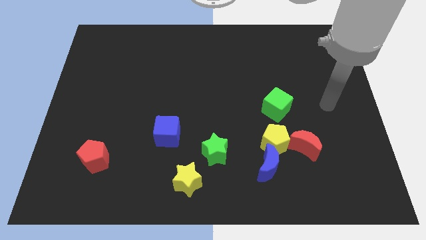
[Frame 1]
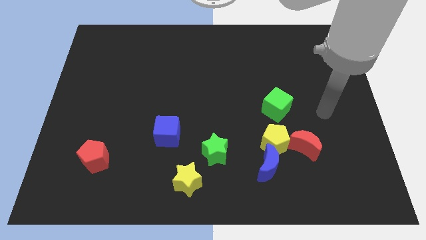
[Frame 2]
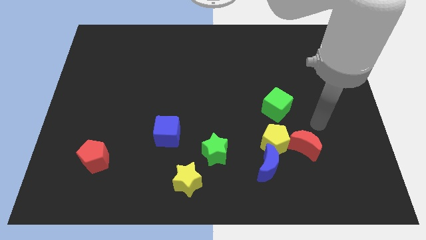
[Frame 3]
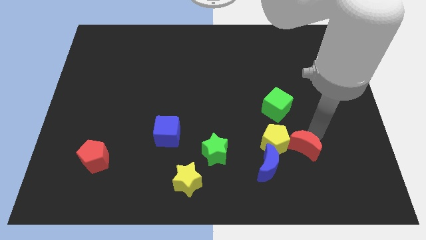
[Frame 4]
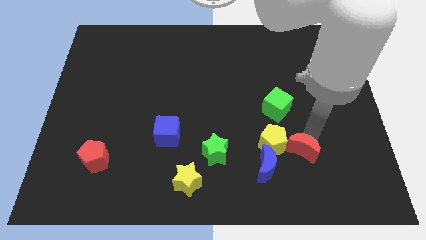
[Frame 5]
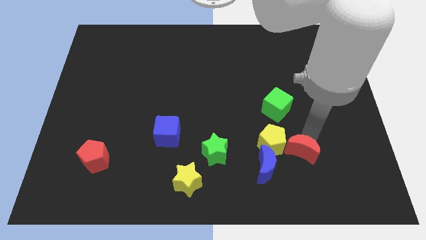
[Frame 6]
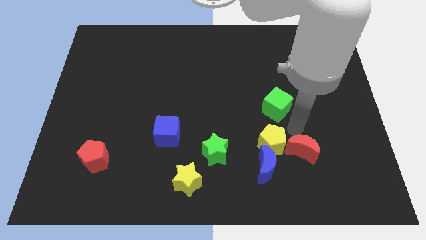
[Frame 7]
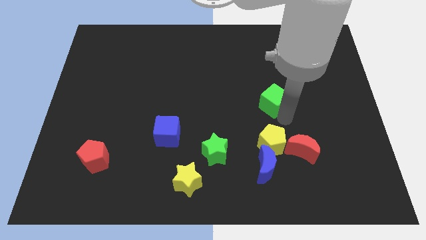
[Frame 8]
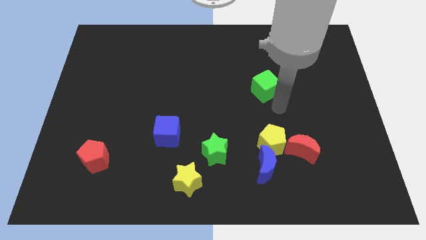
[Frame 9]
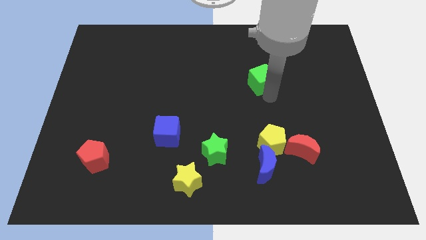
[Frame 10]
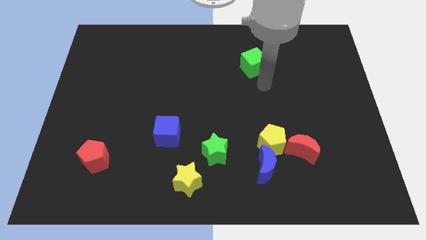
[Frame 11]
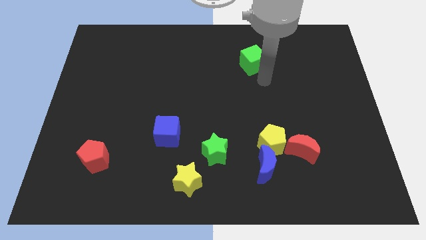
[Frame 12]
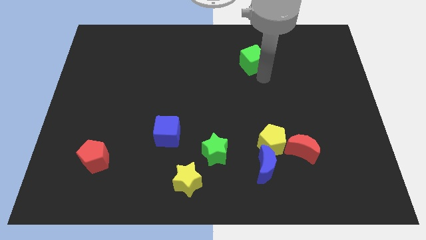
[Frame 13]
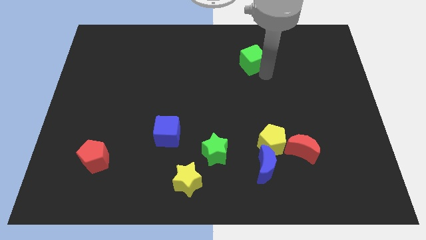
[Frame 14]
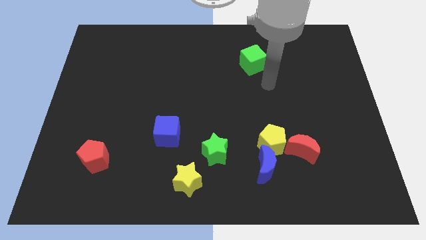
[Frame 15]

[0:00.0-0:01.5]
slide the green cube towards the top center

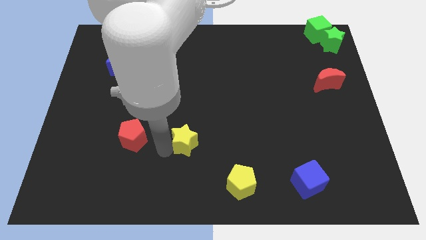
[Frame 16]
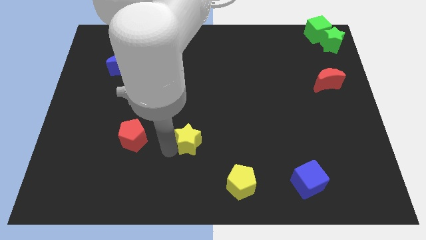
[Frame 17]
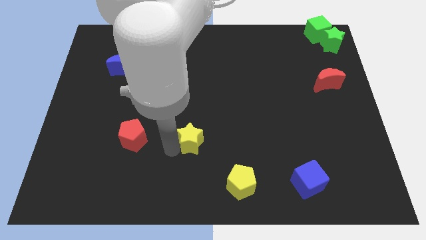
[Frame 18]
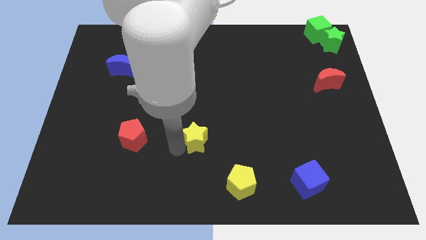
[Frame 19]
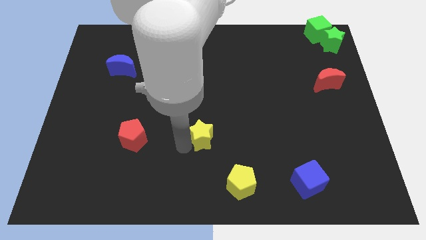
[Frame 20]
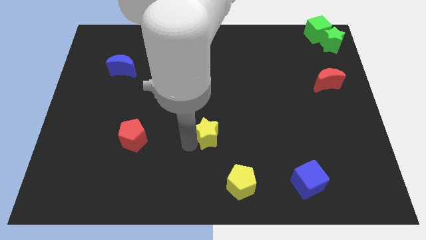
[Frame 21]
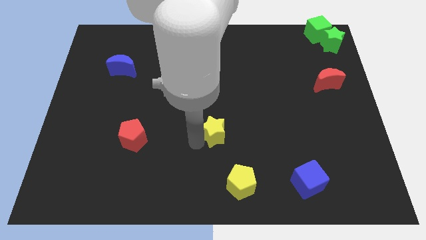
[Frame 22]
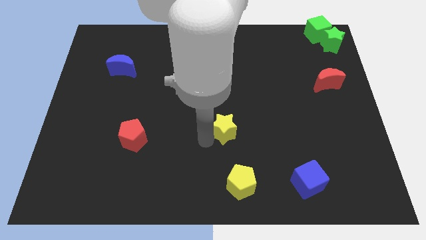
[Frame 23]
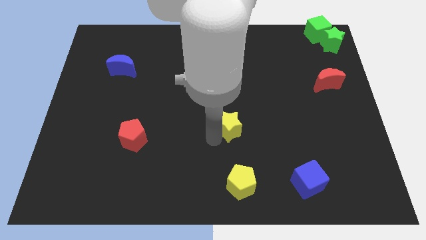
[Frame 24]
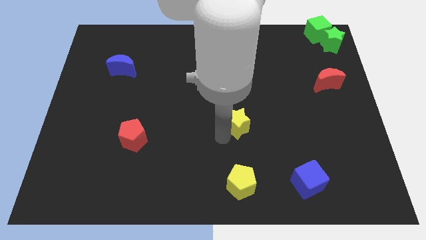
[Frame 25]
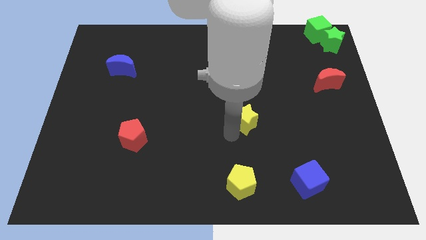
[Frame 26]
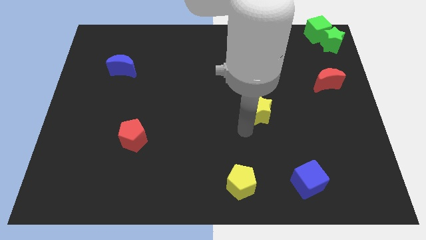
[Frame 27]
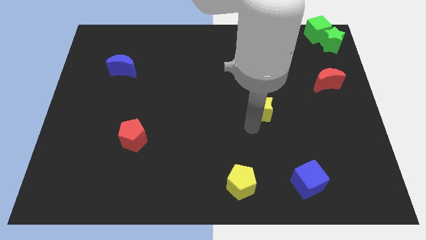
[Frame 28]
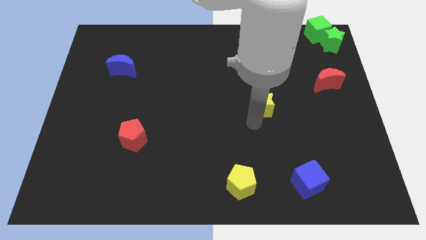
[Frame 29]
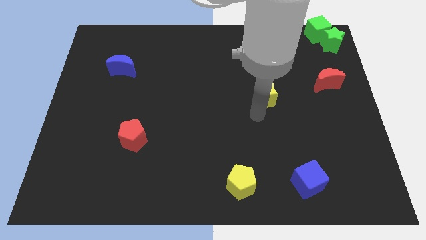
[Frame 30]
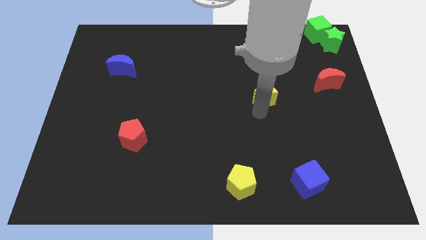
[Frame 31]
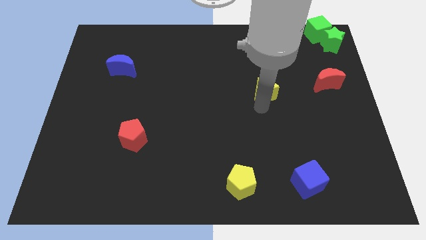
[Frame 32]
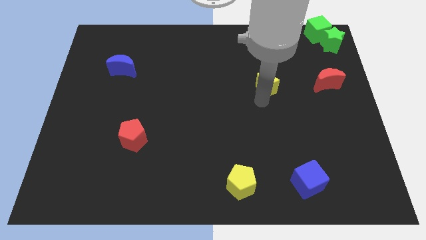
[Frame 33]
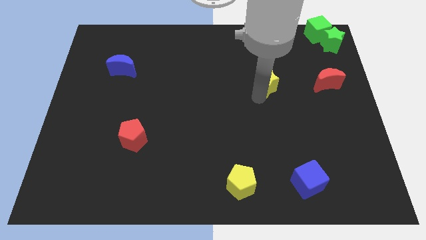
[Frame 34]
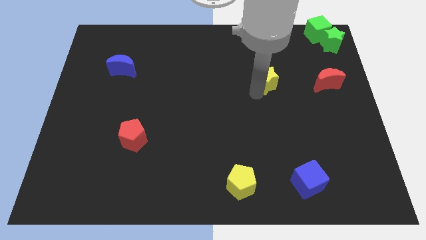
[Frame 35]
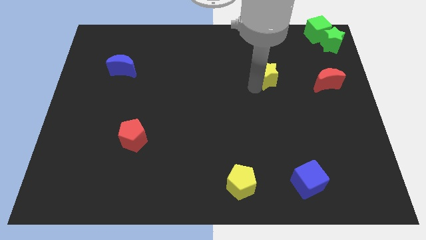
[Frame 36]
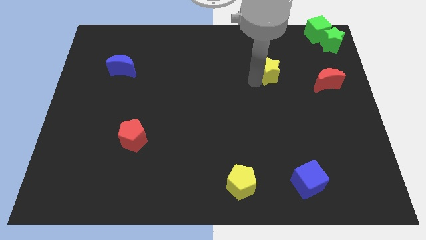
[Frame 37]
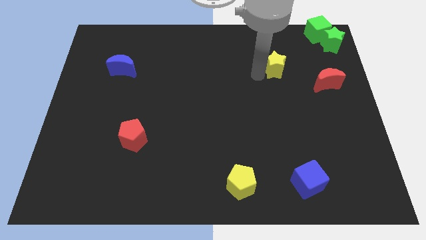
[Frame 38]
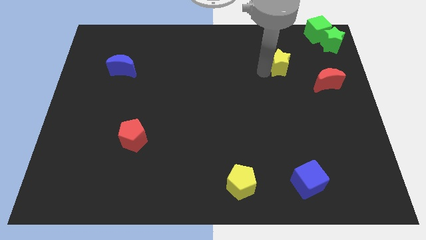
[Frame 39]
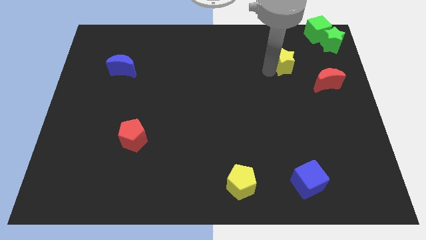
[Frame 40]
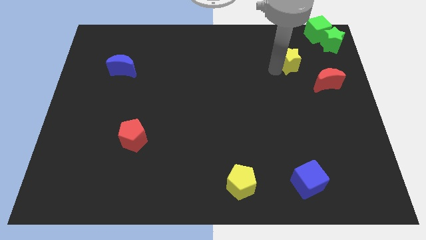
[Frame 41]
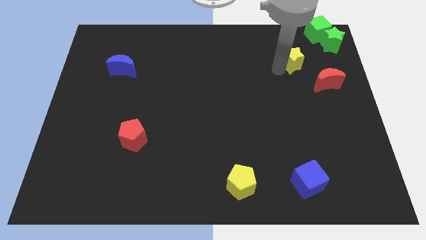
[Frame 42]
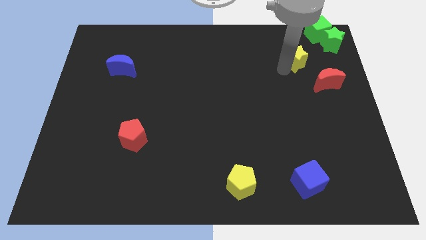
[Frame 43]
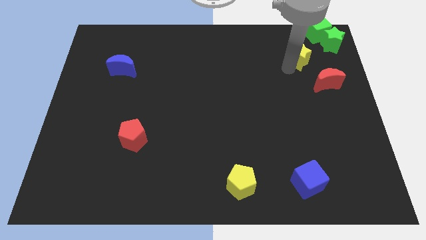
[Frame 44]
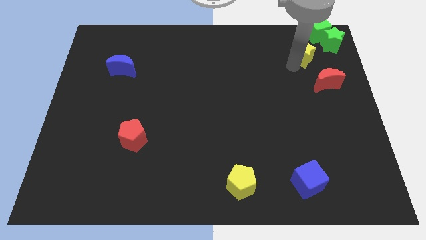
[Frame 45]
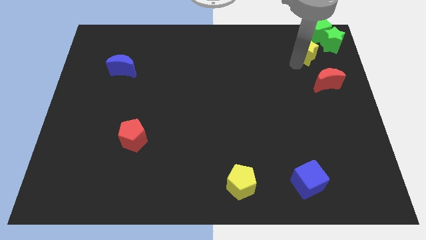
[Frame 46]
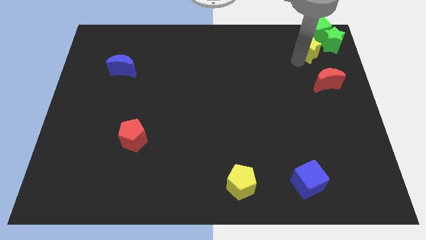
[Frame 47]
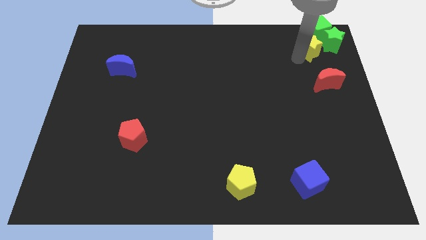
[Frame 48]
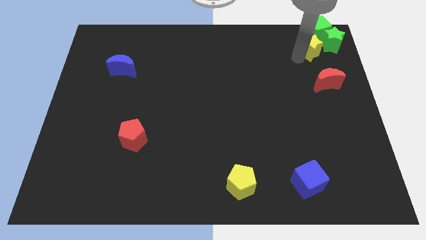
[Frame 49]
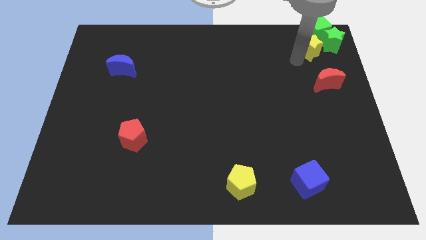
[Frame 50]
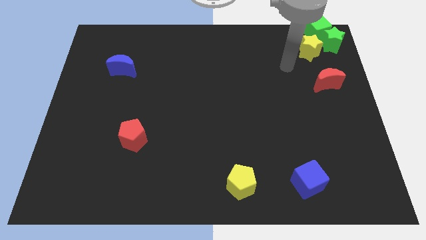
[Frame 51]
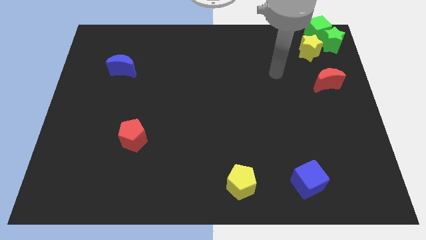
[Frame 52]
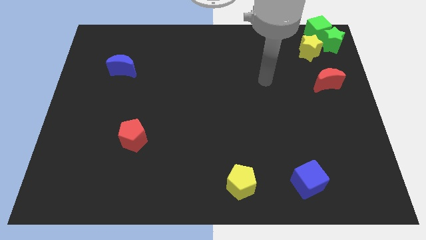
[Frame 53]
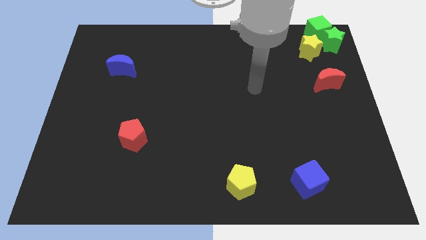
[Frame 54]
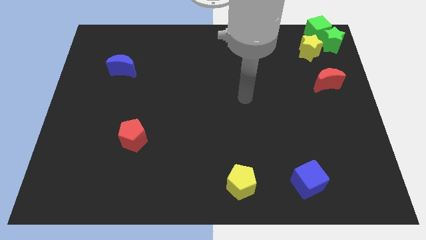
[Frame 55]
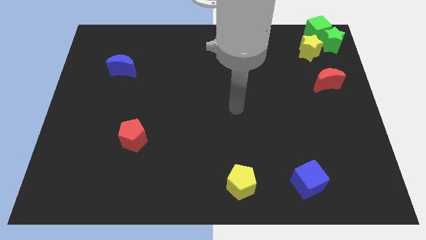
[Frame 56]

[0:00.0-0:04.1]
move the yellow star at the top right corner

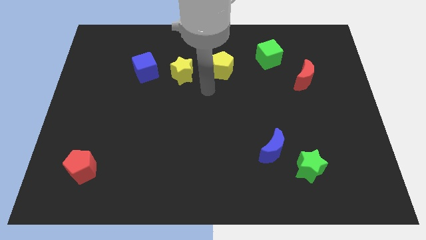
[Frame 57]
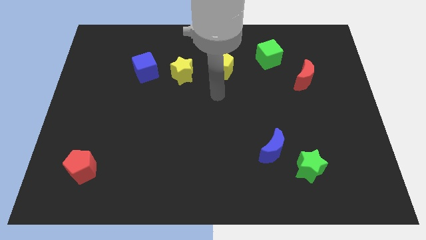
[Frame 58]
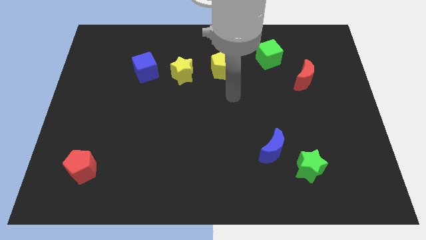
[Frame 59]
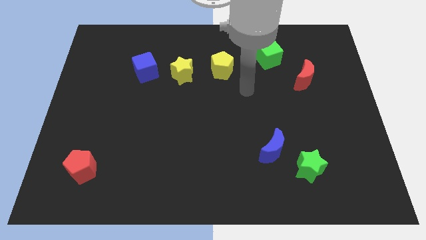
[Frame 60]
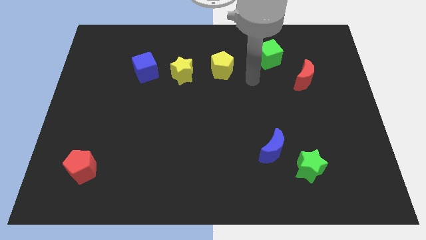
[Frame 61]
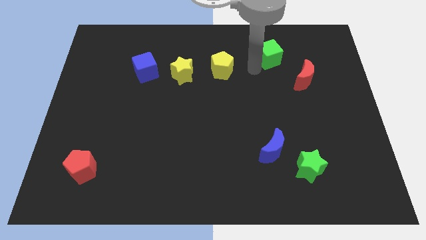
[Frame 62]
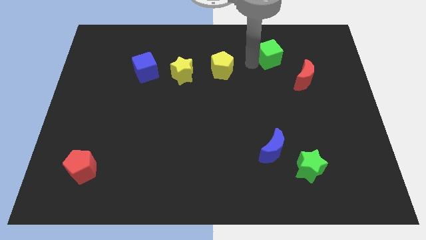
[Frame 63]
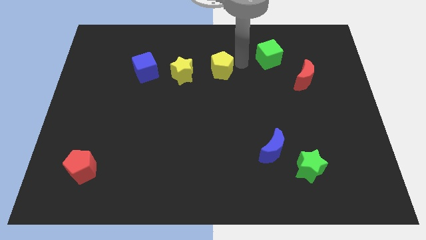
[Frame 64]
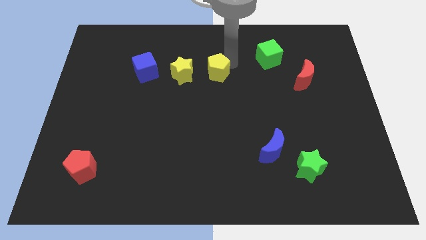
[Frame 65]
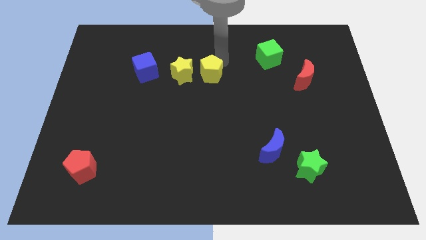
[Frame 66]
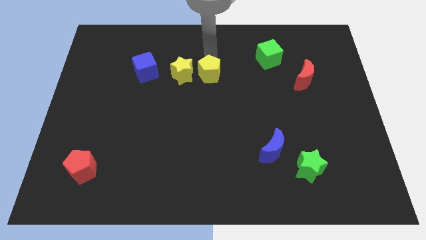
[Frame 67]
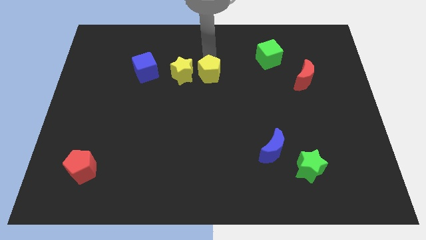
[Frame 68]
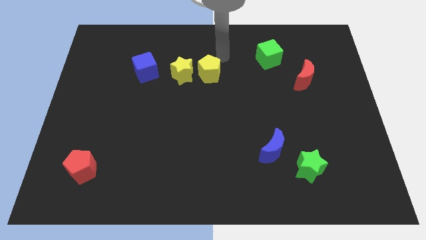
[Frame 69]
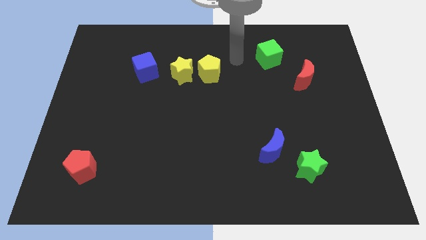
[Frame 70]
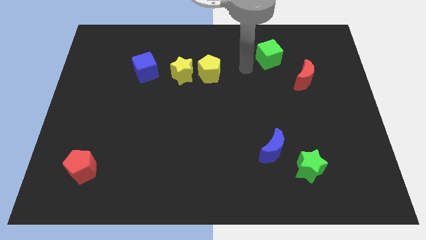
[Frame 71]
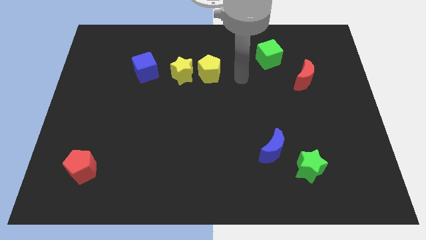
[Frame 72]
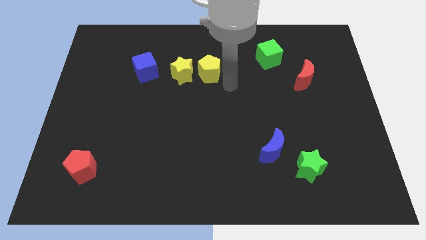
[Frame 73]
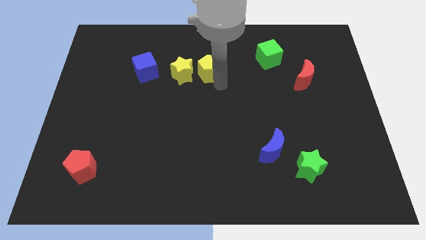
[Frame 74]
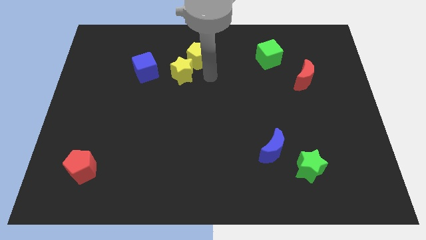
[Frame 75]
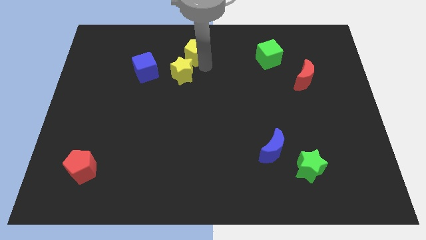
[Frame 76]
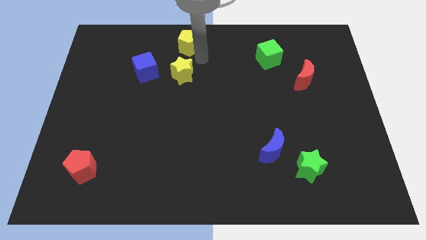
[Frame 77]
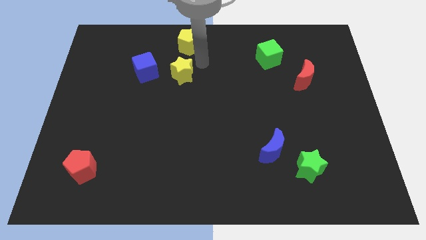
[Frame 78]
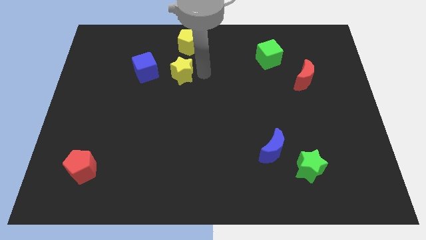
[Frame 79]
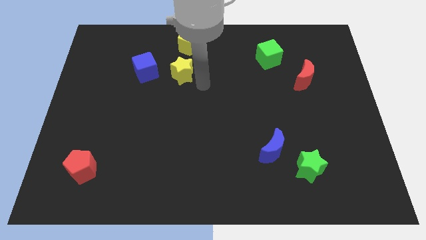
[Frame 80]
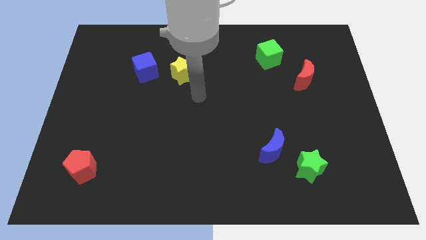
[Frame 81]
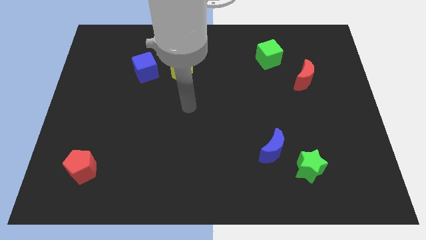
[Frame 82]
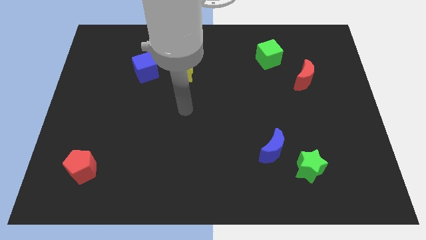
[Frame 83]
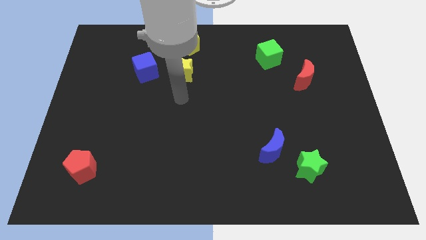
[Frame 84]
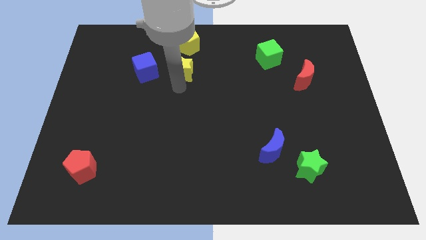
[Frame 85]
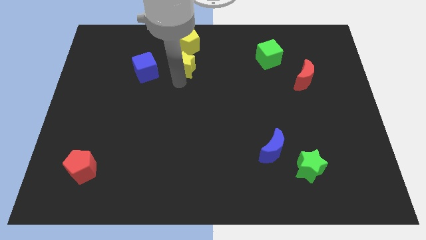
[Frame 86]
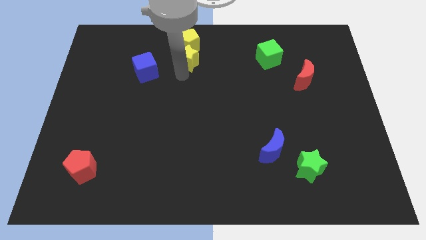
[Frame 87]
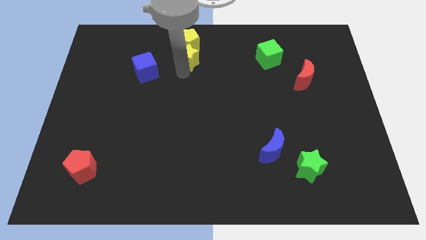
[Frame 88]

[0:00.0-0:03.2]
place the yellow star below yellow pentagon
